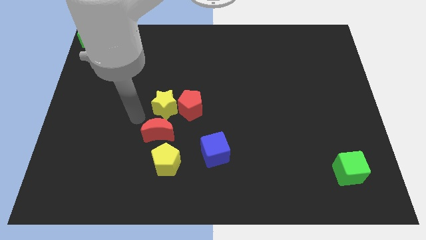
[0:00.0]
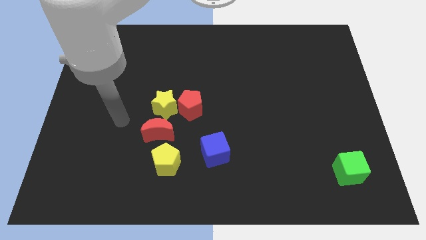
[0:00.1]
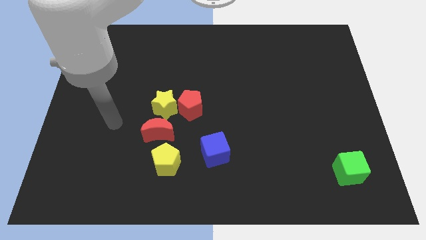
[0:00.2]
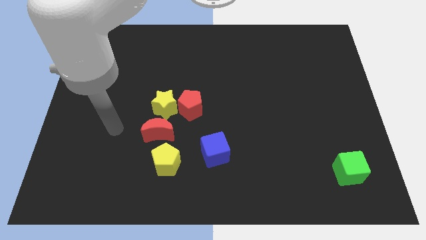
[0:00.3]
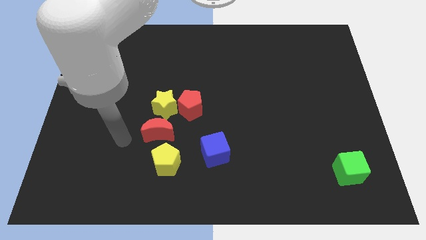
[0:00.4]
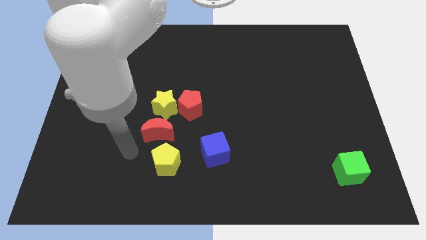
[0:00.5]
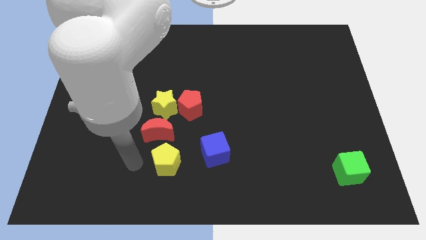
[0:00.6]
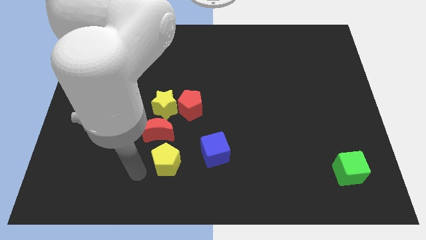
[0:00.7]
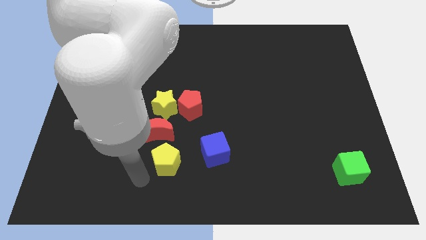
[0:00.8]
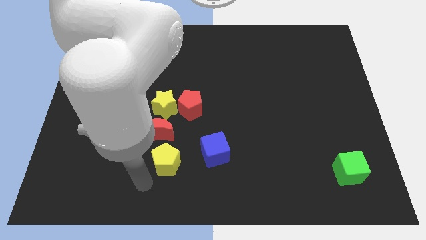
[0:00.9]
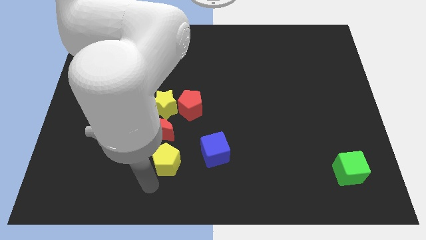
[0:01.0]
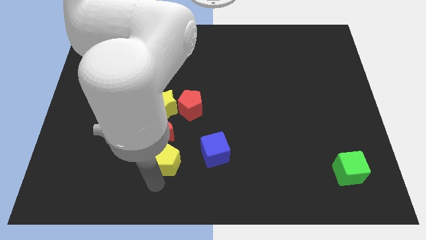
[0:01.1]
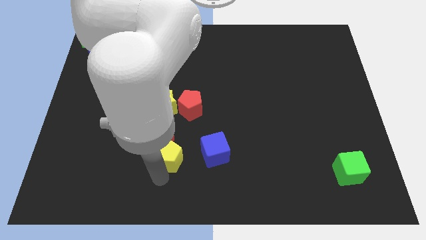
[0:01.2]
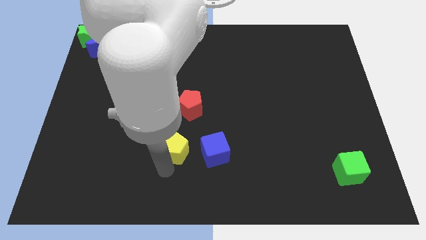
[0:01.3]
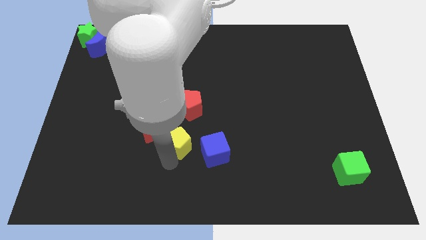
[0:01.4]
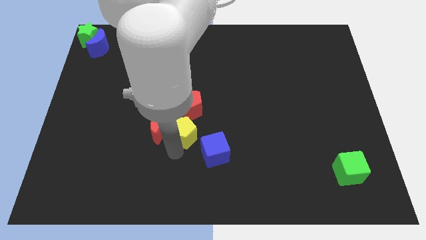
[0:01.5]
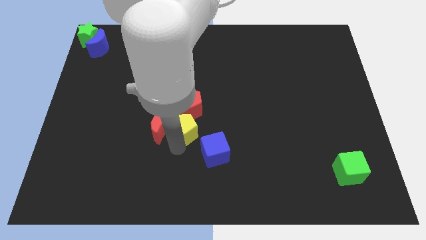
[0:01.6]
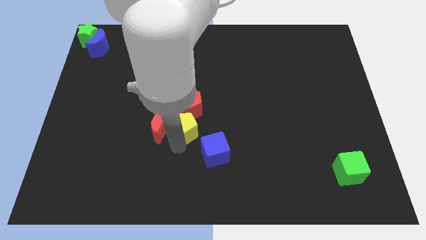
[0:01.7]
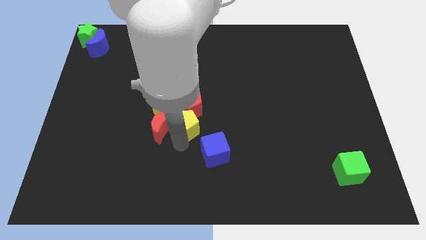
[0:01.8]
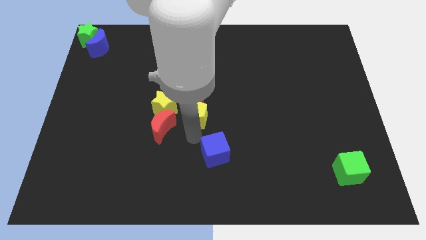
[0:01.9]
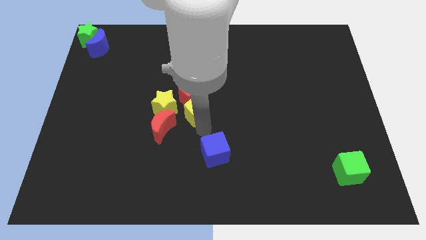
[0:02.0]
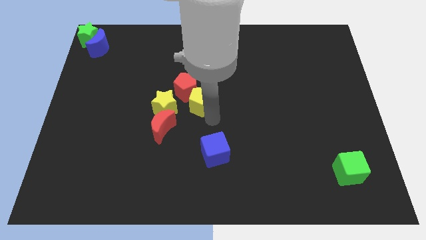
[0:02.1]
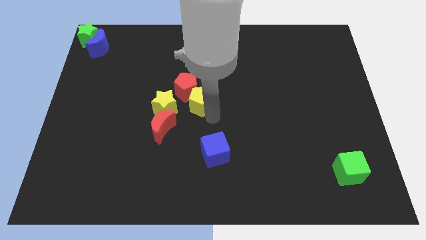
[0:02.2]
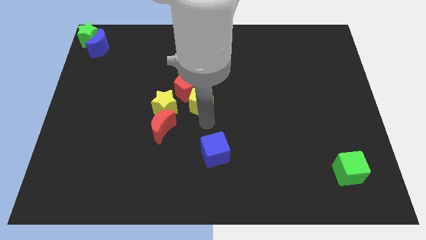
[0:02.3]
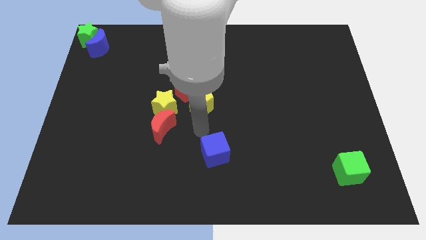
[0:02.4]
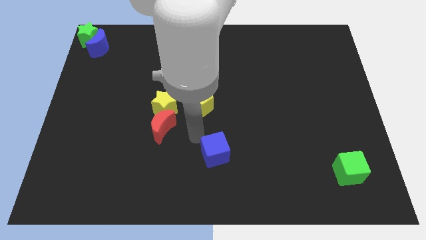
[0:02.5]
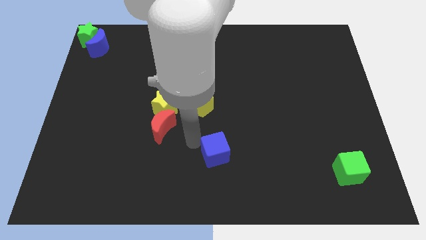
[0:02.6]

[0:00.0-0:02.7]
move the yellow pentagon into the bottom of the red pentagon

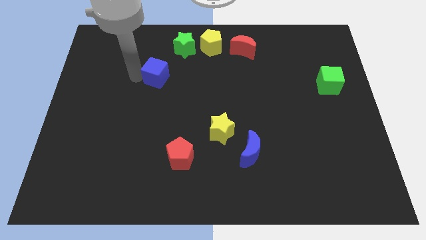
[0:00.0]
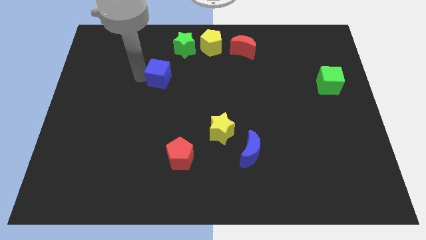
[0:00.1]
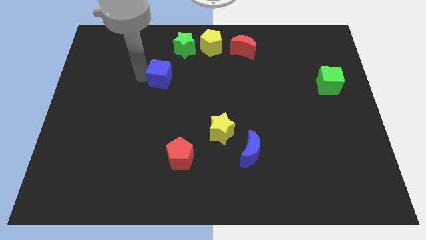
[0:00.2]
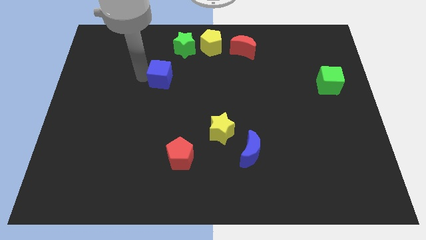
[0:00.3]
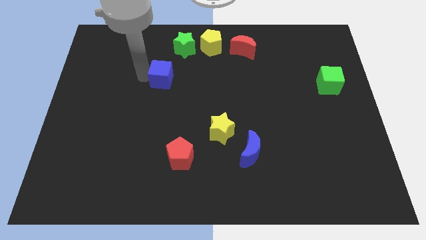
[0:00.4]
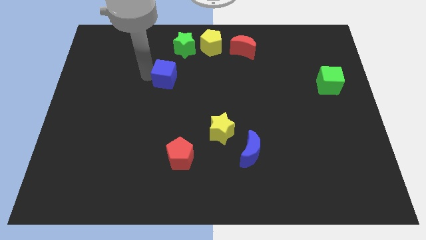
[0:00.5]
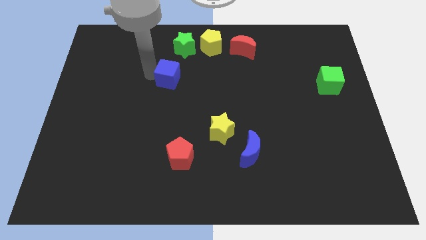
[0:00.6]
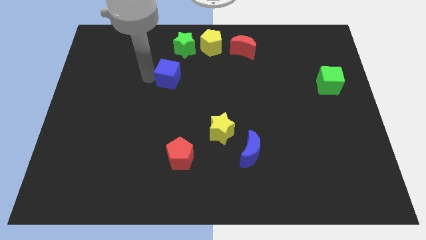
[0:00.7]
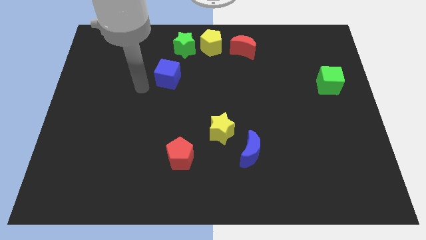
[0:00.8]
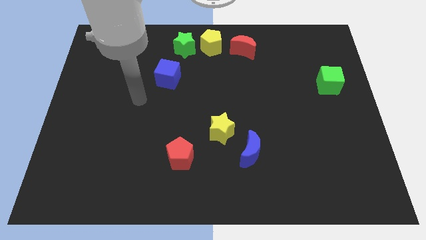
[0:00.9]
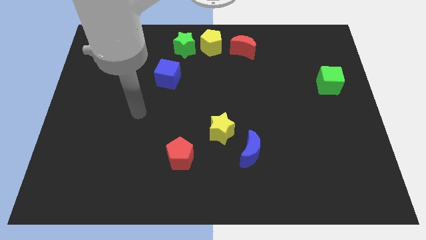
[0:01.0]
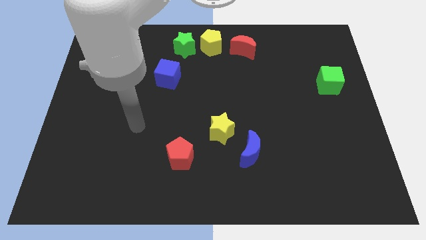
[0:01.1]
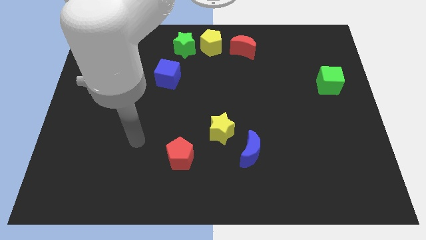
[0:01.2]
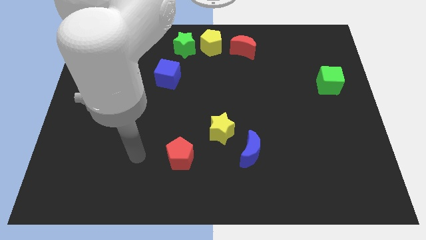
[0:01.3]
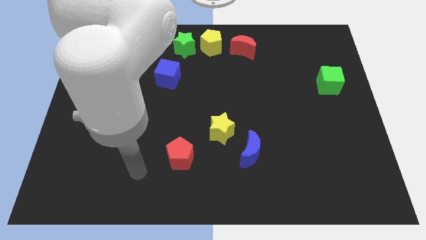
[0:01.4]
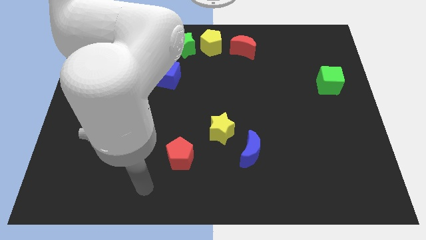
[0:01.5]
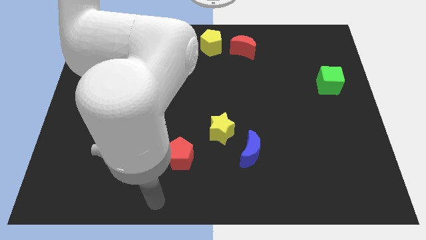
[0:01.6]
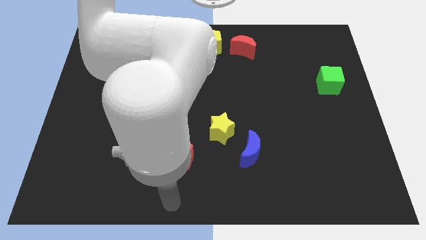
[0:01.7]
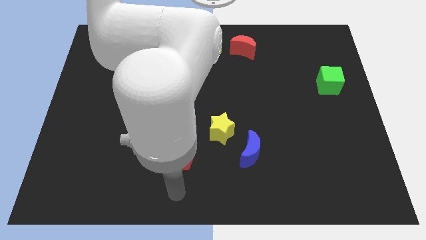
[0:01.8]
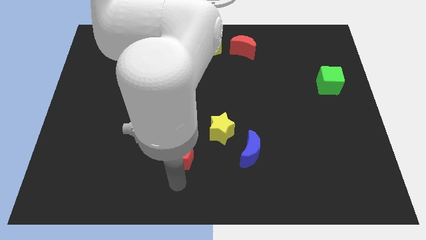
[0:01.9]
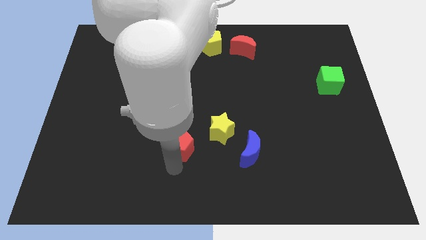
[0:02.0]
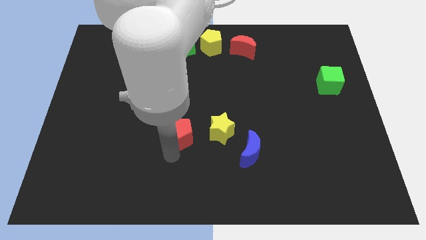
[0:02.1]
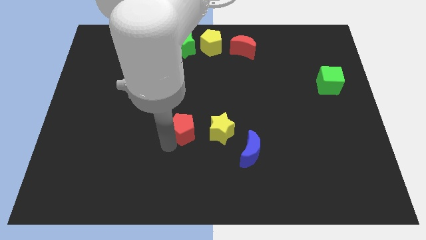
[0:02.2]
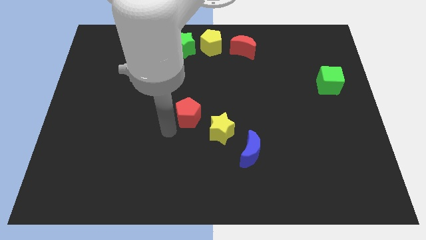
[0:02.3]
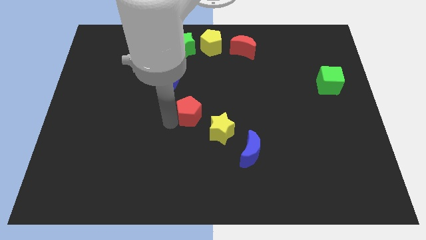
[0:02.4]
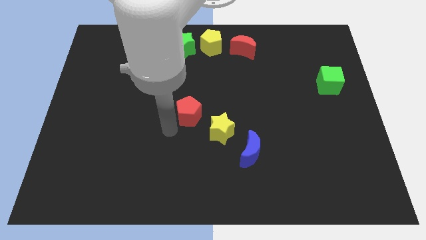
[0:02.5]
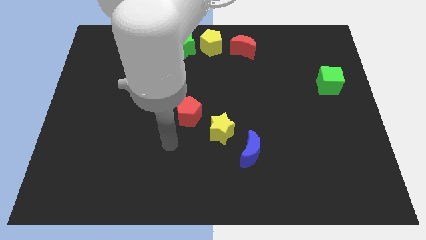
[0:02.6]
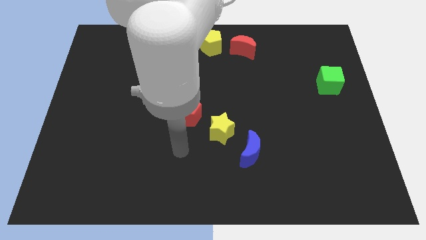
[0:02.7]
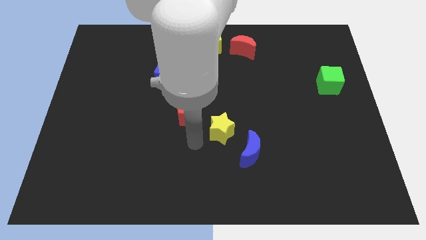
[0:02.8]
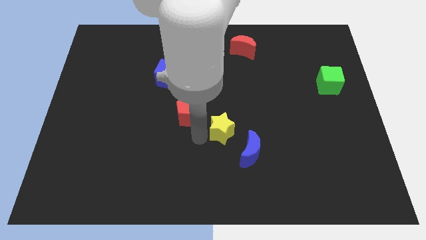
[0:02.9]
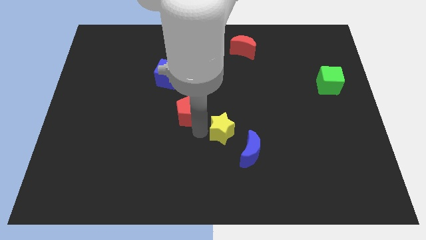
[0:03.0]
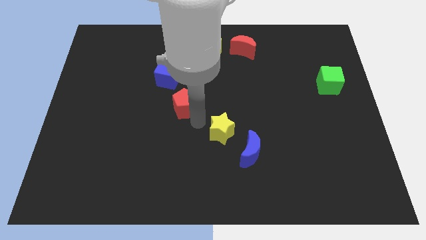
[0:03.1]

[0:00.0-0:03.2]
place the red pentagon between the yellow star and blue cube

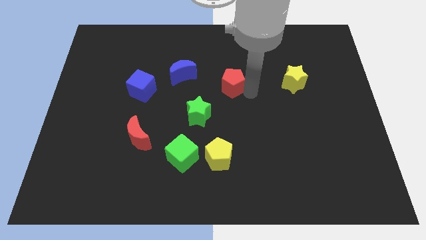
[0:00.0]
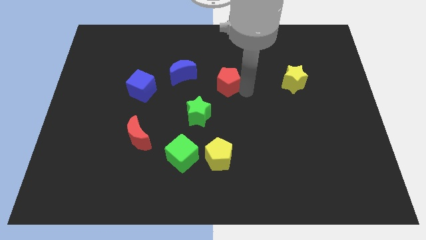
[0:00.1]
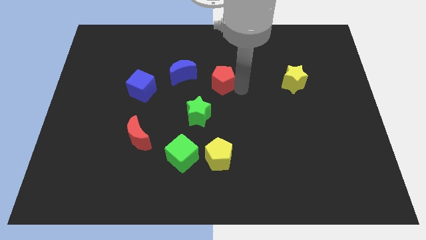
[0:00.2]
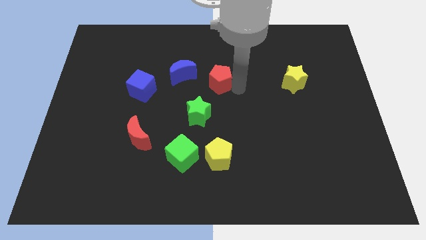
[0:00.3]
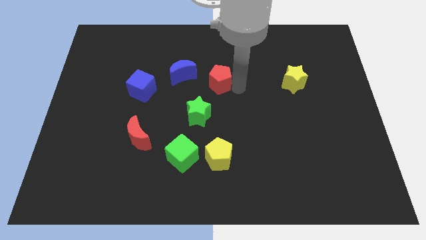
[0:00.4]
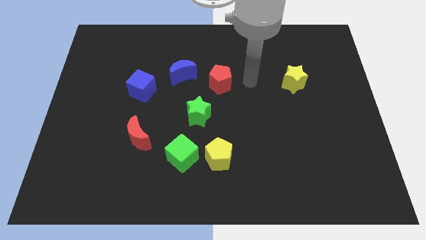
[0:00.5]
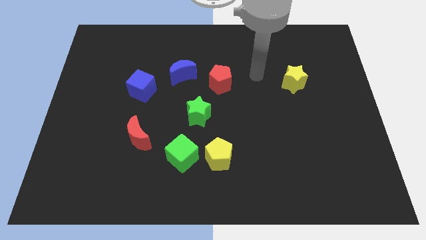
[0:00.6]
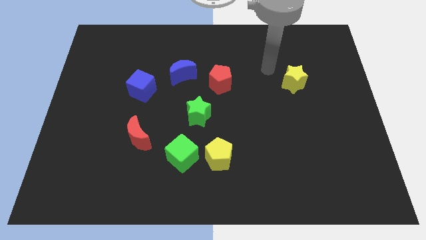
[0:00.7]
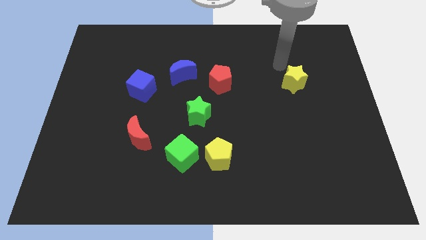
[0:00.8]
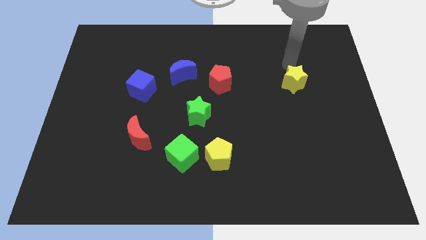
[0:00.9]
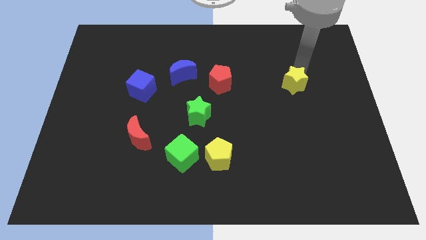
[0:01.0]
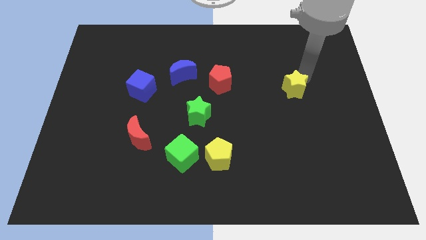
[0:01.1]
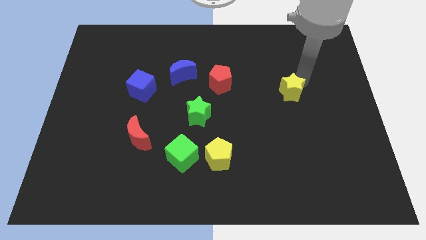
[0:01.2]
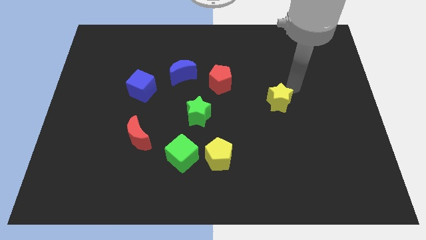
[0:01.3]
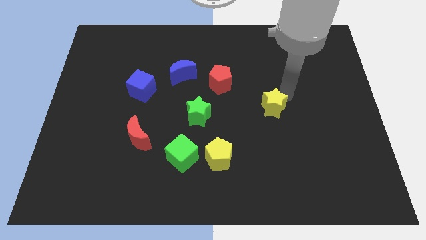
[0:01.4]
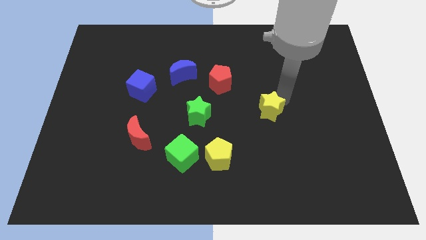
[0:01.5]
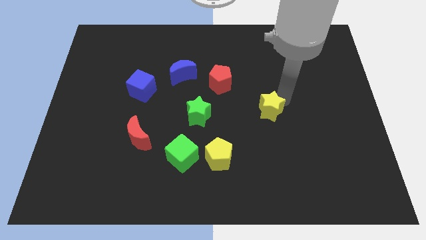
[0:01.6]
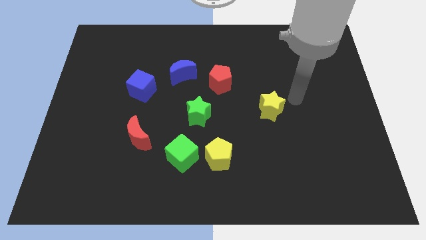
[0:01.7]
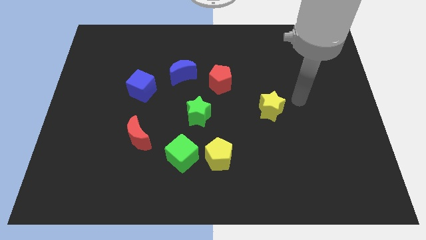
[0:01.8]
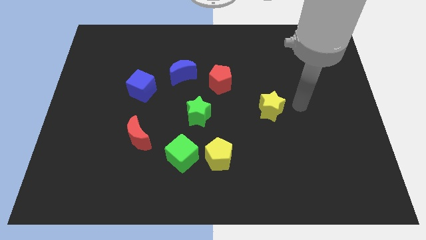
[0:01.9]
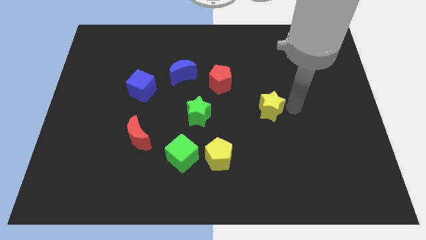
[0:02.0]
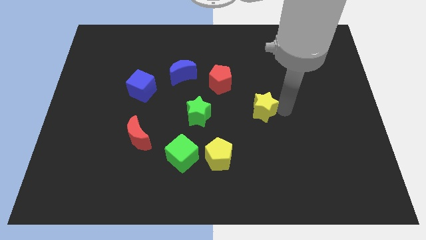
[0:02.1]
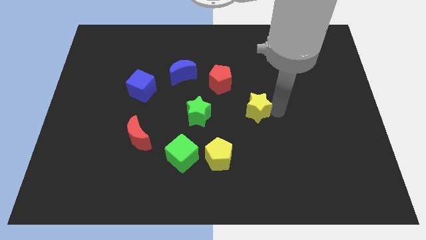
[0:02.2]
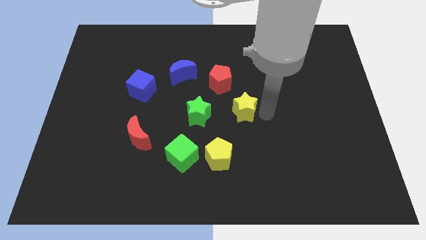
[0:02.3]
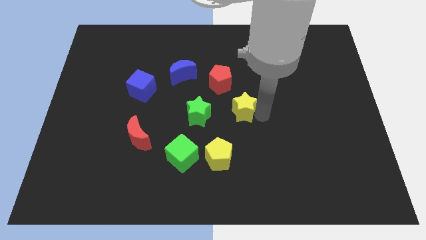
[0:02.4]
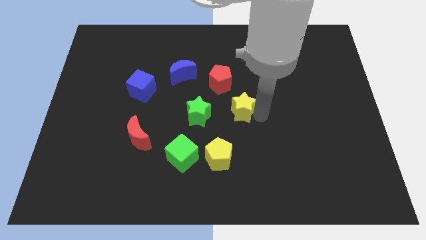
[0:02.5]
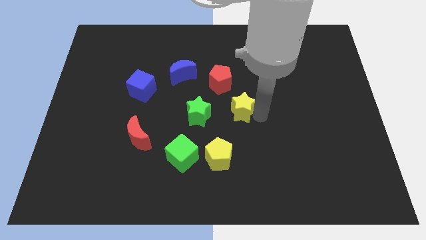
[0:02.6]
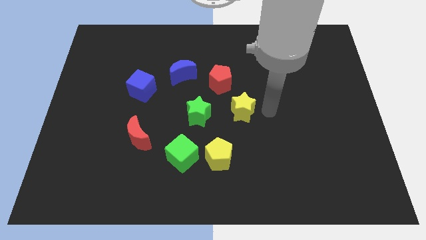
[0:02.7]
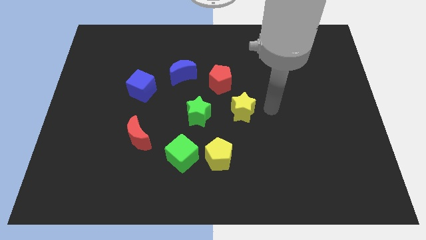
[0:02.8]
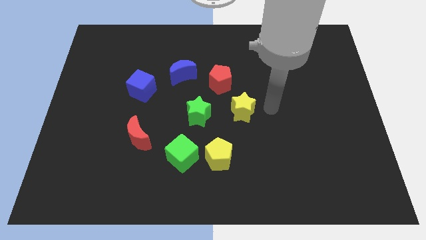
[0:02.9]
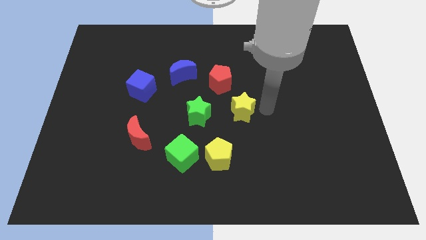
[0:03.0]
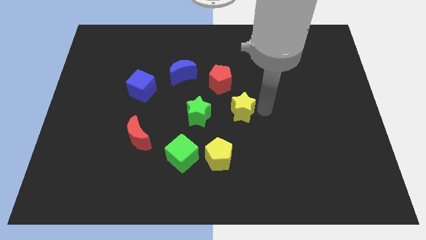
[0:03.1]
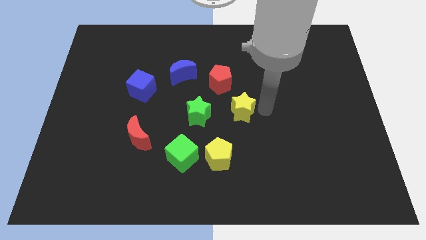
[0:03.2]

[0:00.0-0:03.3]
move yellow star to the right of green star
